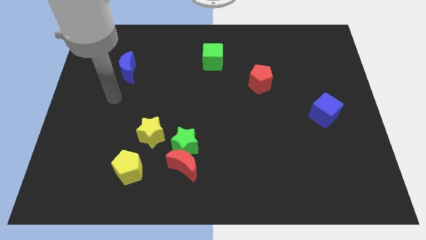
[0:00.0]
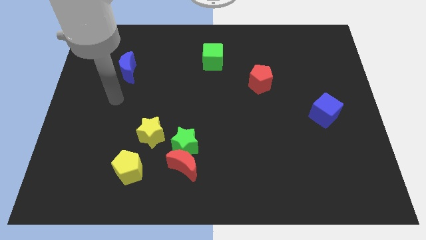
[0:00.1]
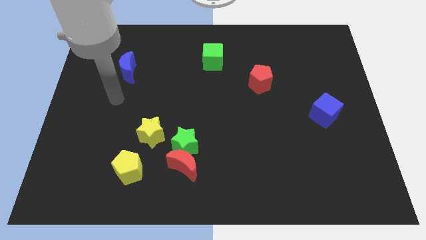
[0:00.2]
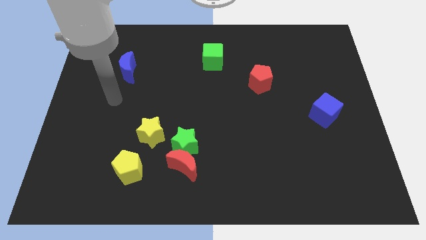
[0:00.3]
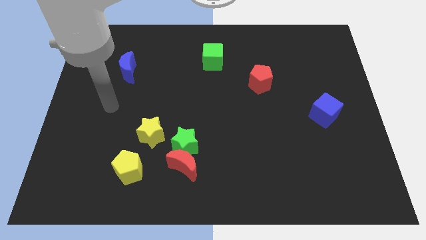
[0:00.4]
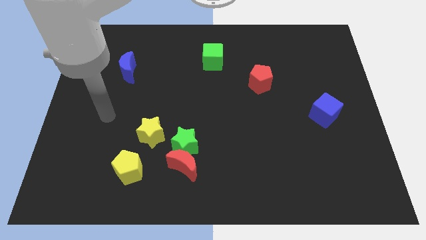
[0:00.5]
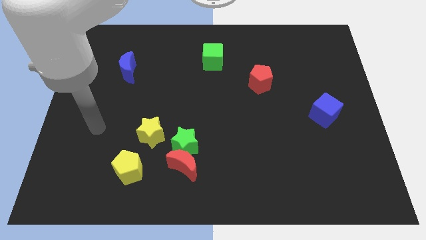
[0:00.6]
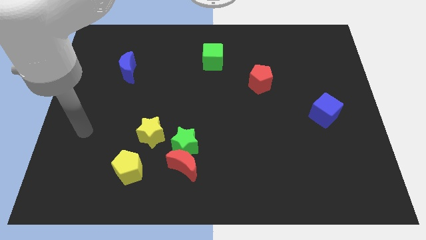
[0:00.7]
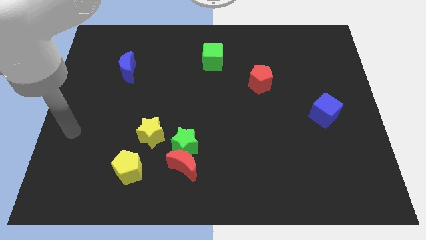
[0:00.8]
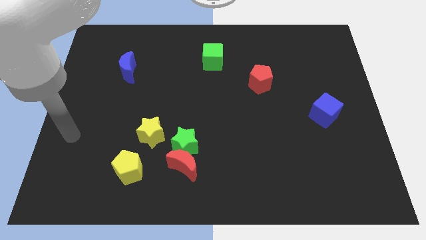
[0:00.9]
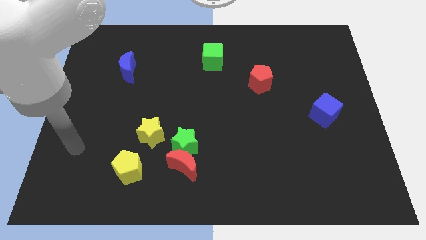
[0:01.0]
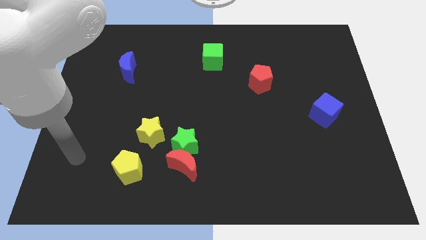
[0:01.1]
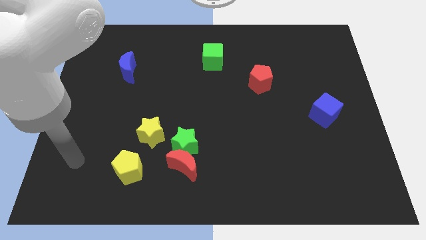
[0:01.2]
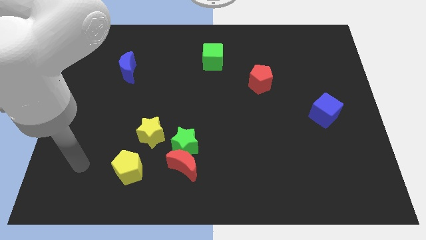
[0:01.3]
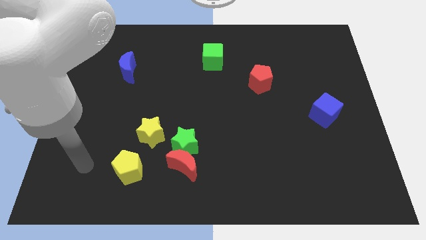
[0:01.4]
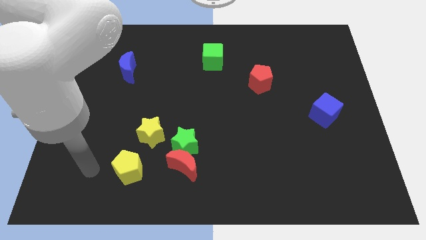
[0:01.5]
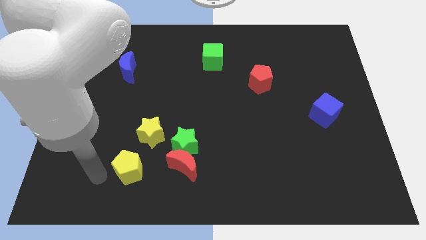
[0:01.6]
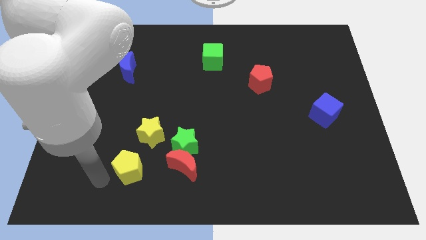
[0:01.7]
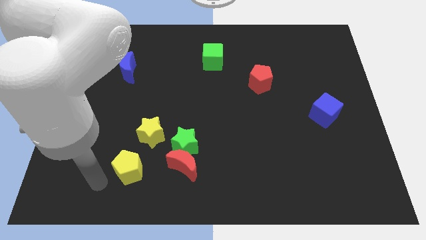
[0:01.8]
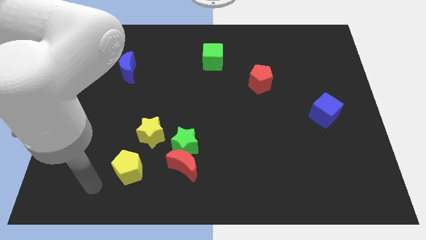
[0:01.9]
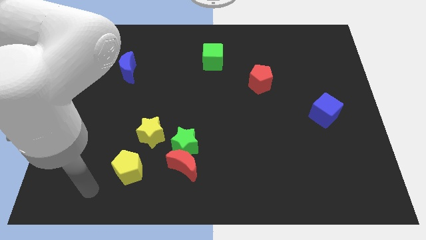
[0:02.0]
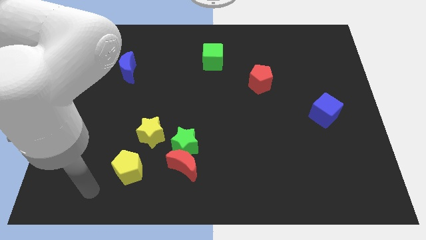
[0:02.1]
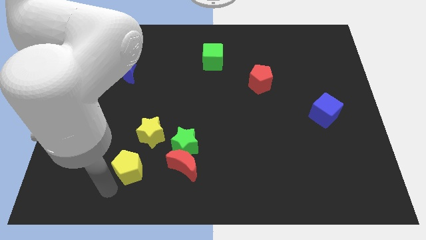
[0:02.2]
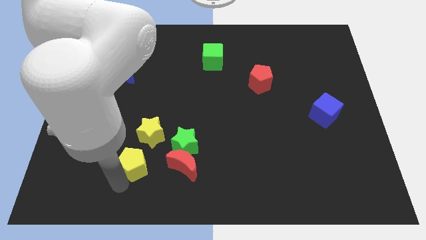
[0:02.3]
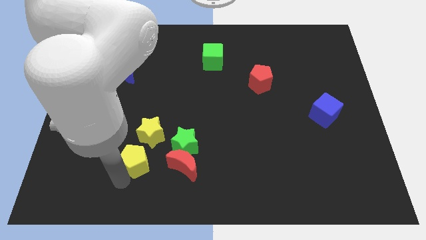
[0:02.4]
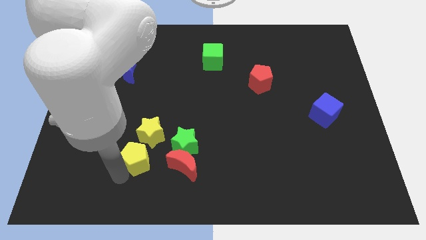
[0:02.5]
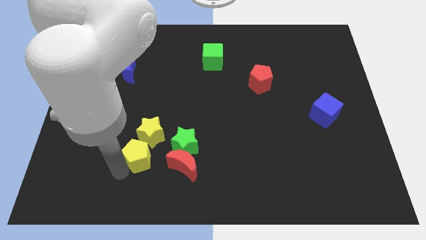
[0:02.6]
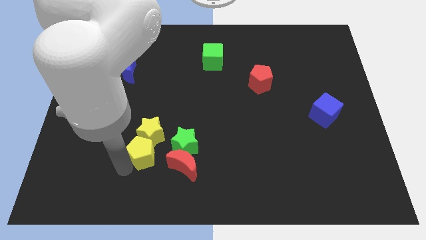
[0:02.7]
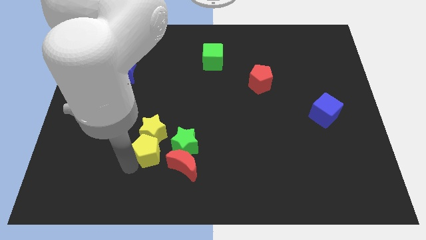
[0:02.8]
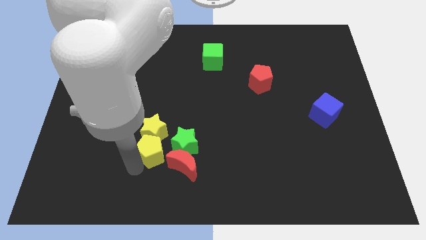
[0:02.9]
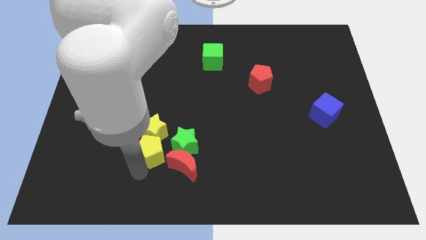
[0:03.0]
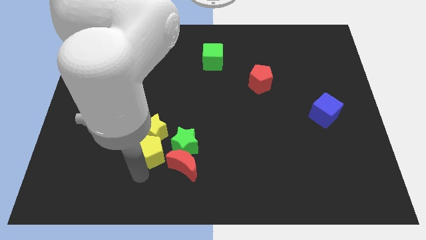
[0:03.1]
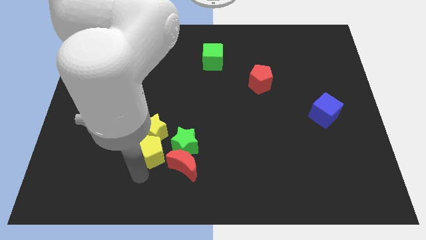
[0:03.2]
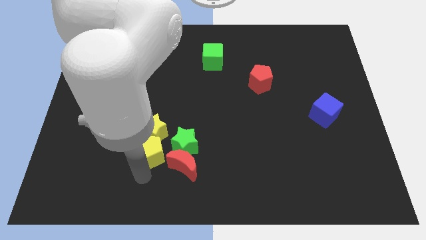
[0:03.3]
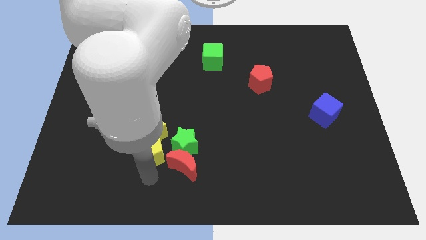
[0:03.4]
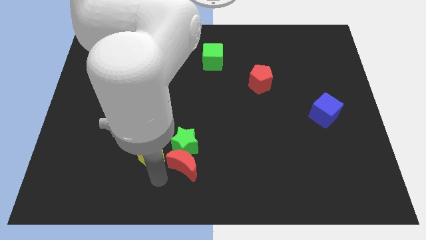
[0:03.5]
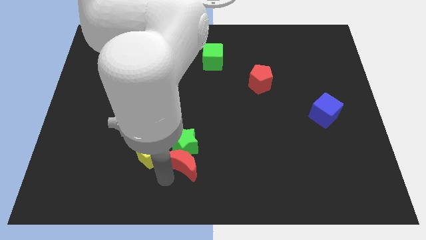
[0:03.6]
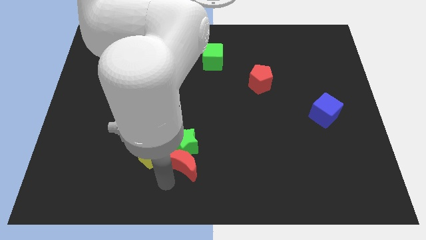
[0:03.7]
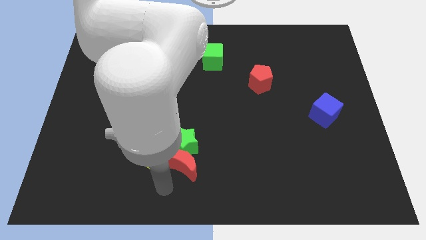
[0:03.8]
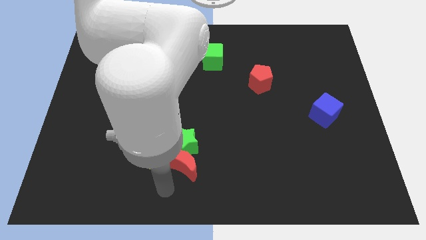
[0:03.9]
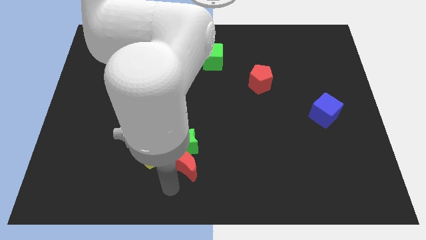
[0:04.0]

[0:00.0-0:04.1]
place the yellow pentagon below the yellow star

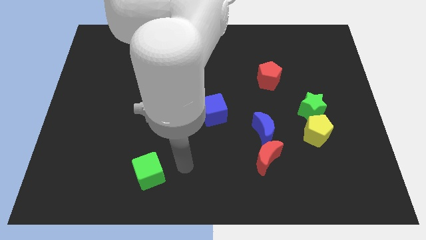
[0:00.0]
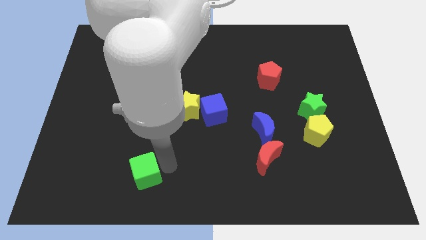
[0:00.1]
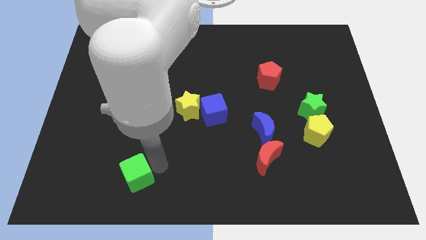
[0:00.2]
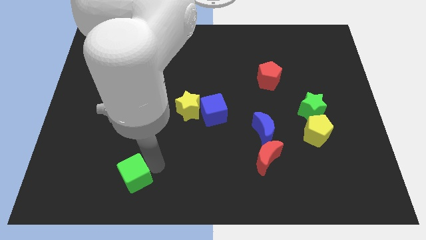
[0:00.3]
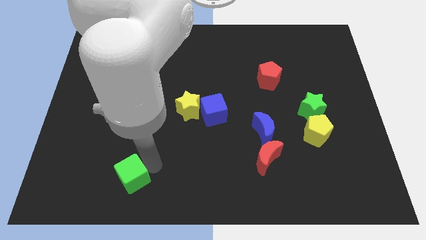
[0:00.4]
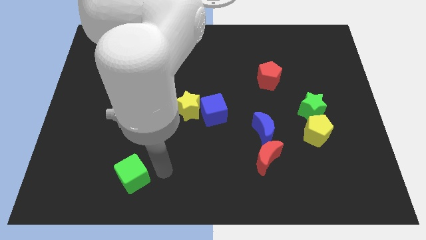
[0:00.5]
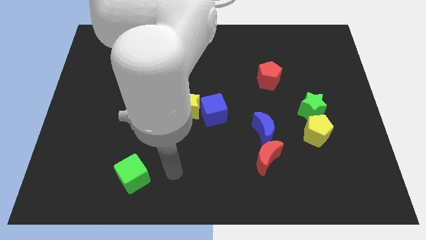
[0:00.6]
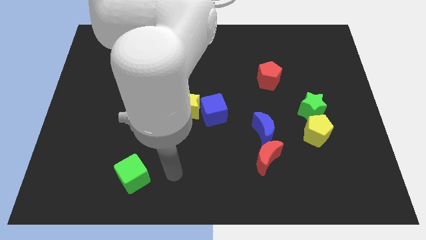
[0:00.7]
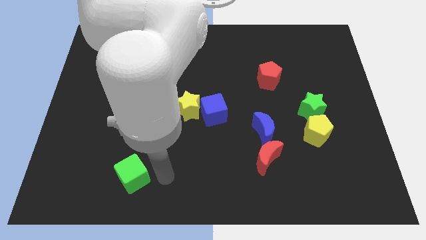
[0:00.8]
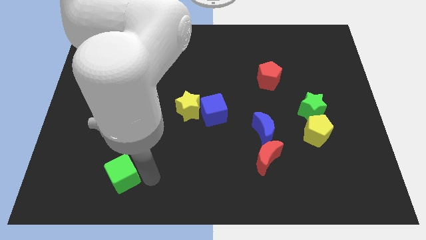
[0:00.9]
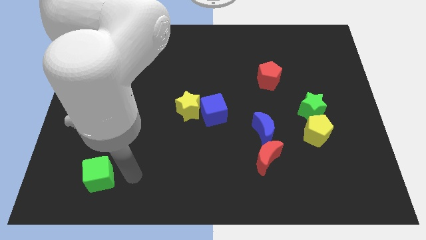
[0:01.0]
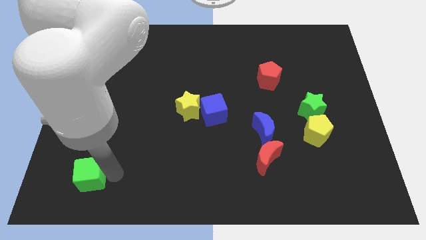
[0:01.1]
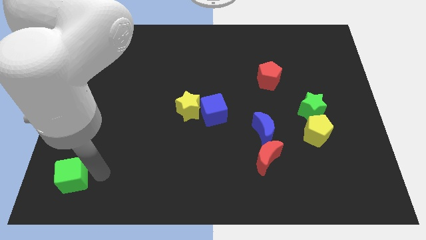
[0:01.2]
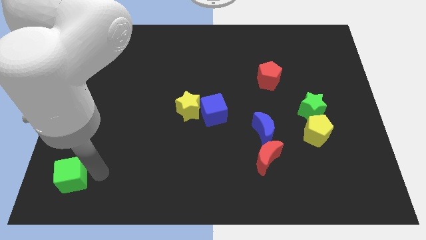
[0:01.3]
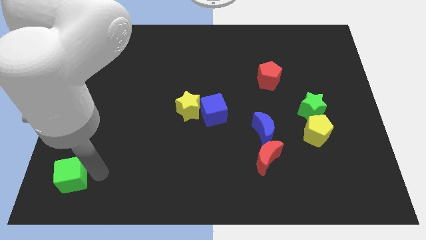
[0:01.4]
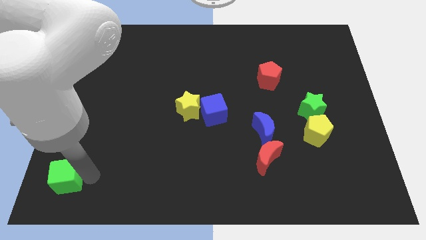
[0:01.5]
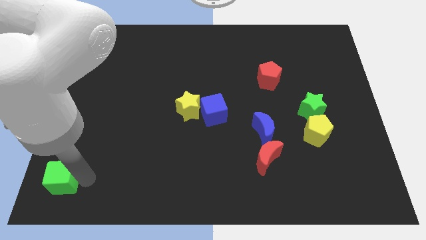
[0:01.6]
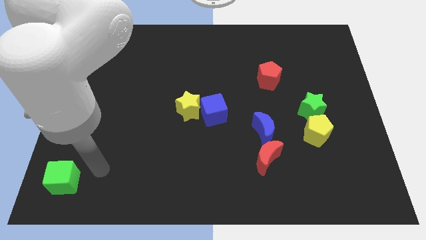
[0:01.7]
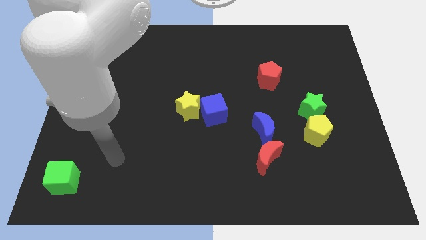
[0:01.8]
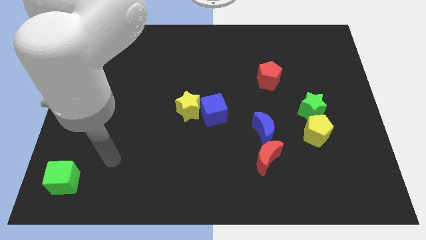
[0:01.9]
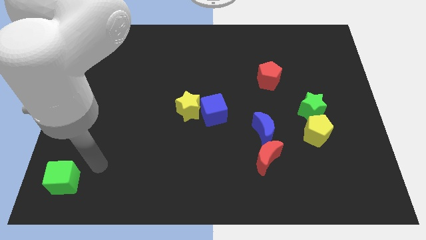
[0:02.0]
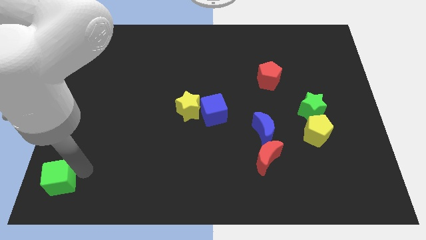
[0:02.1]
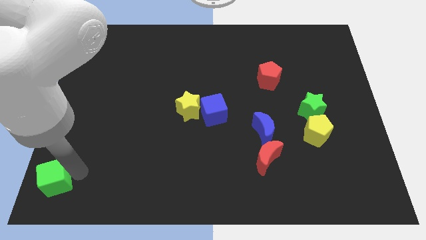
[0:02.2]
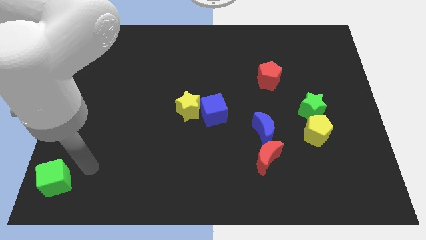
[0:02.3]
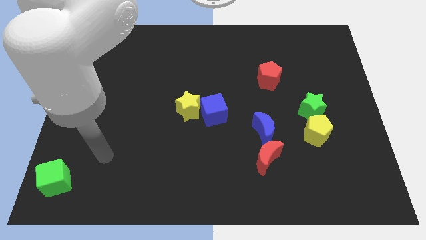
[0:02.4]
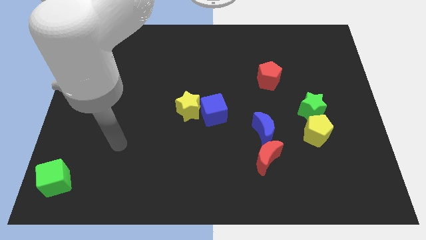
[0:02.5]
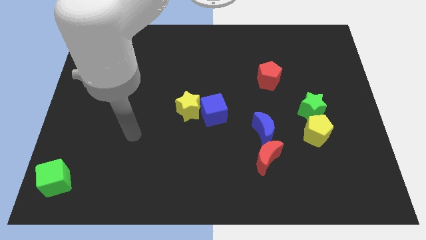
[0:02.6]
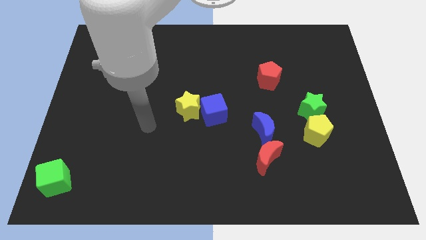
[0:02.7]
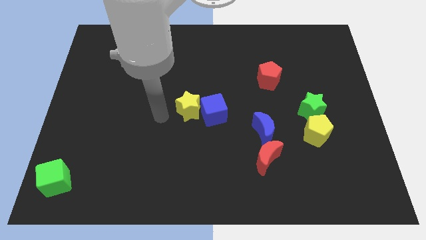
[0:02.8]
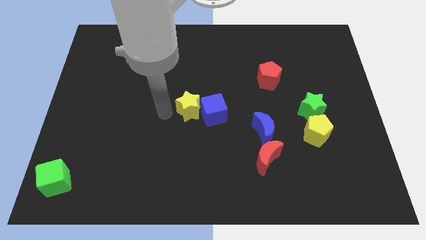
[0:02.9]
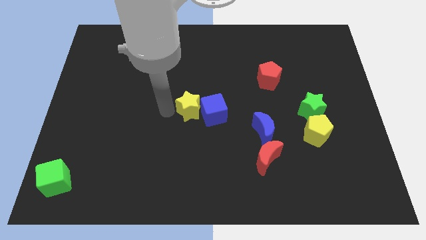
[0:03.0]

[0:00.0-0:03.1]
place the arm left to the yellow star

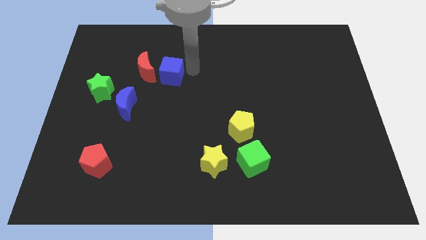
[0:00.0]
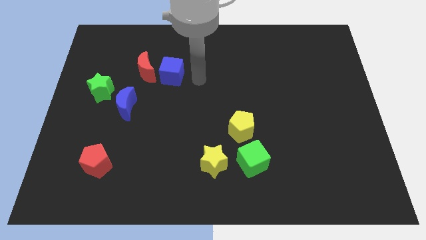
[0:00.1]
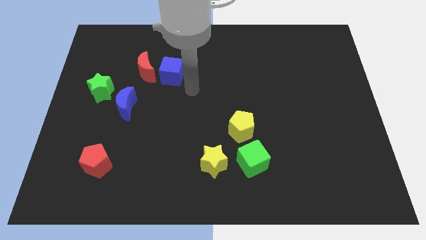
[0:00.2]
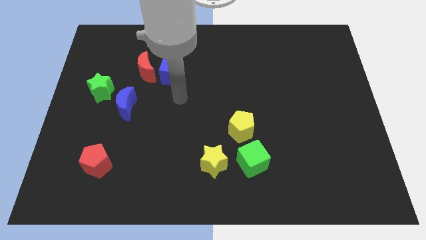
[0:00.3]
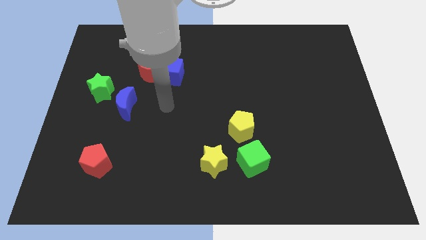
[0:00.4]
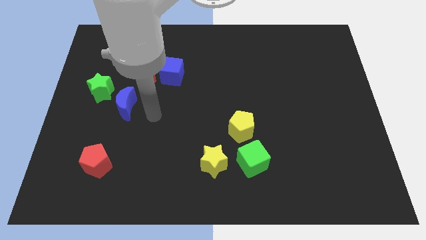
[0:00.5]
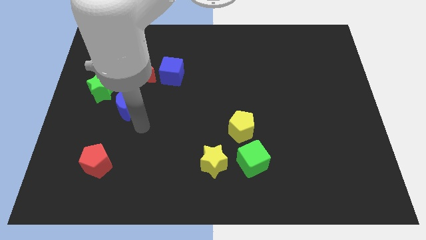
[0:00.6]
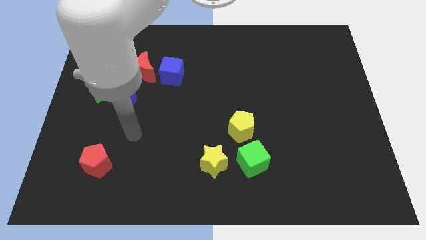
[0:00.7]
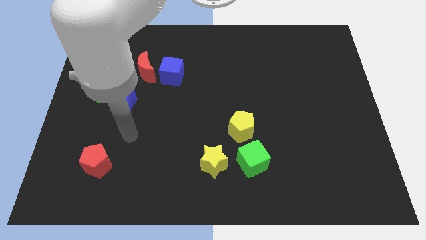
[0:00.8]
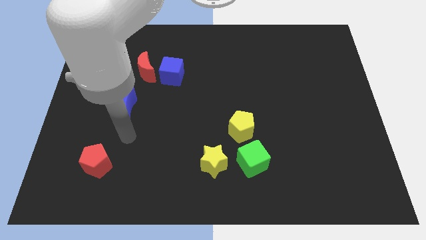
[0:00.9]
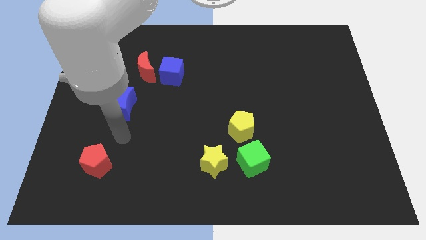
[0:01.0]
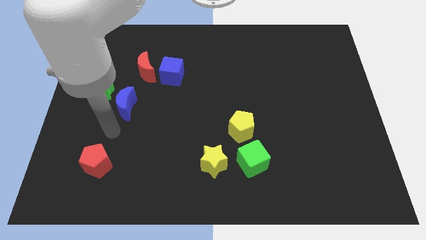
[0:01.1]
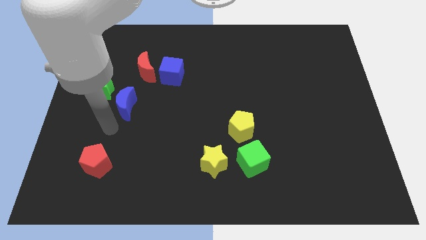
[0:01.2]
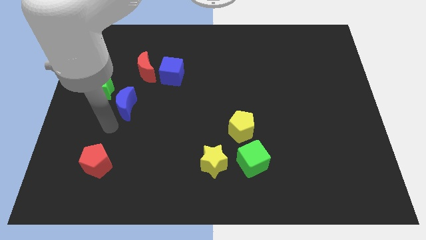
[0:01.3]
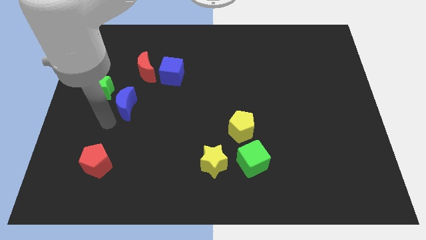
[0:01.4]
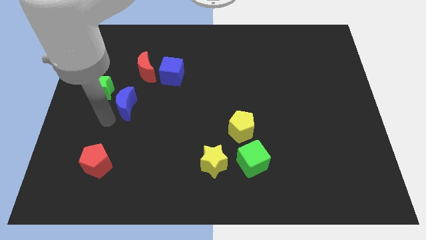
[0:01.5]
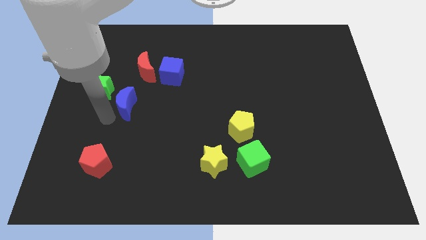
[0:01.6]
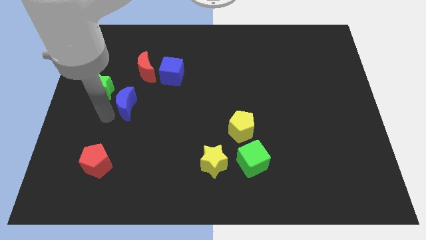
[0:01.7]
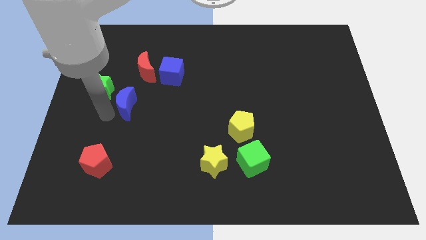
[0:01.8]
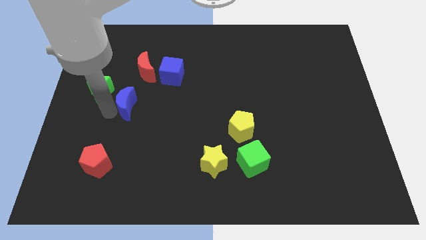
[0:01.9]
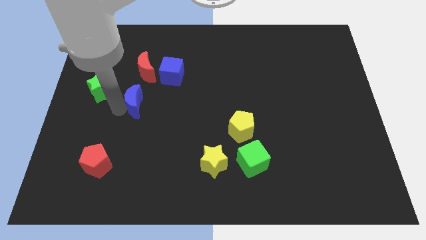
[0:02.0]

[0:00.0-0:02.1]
move the blue crescent slightly right of the board
